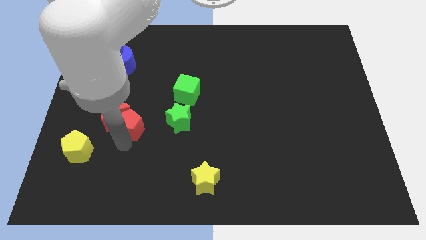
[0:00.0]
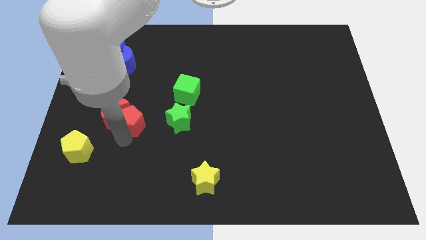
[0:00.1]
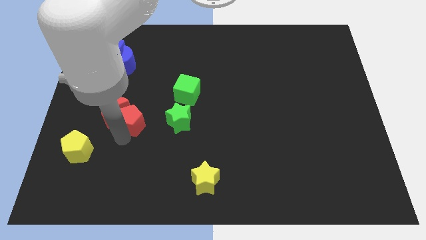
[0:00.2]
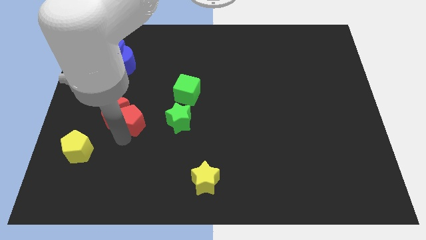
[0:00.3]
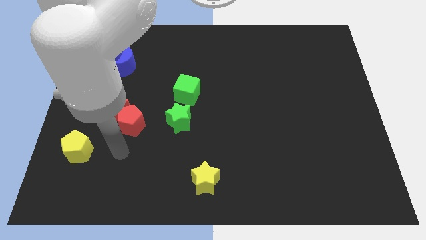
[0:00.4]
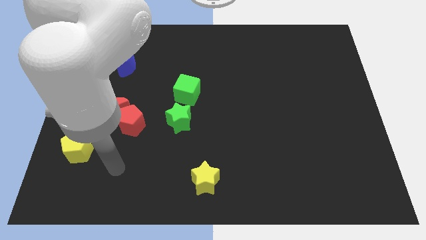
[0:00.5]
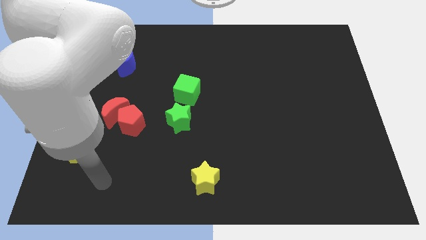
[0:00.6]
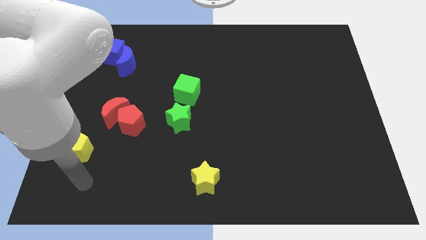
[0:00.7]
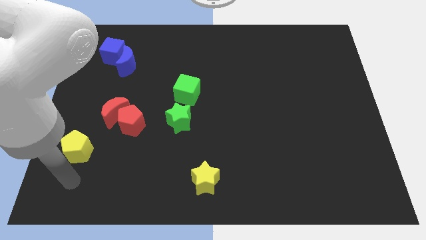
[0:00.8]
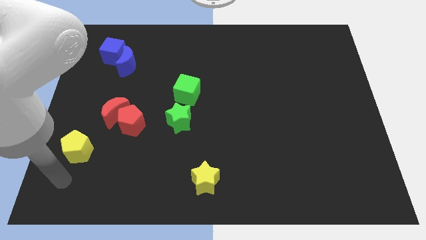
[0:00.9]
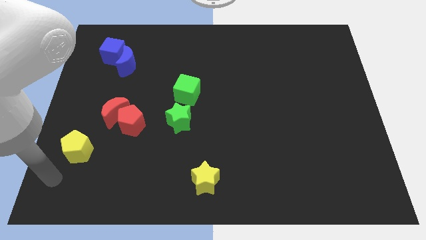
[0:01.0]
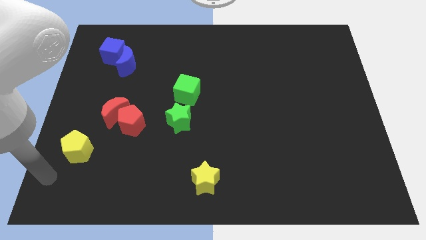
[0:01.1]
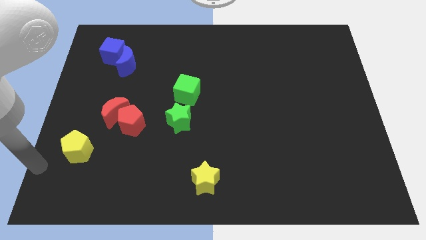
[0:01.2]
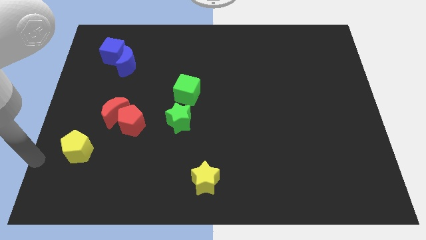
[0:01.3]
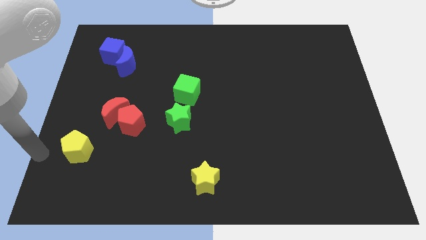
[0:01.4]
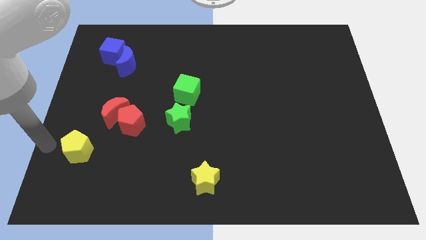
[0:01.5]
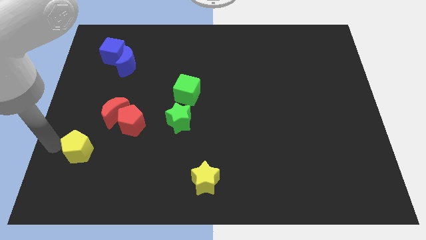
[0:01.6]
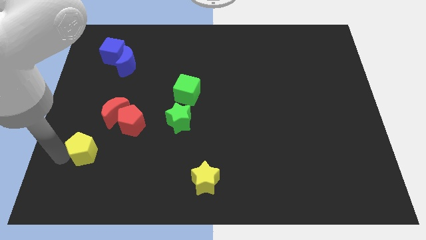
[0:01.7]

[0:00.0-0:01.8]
place your arm at the left of the yellow pentagon

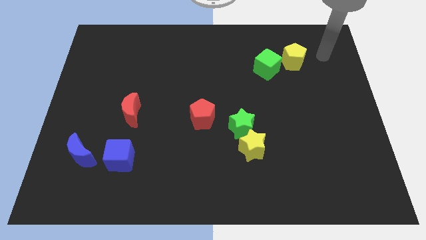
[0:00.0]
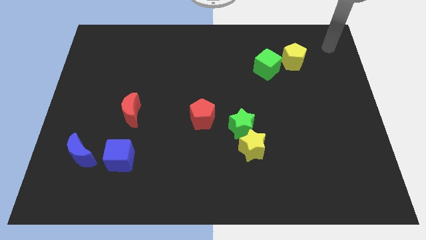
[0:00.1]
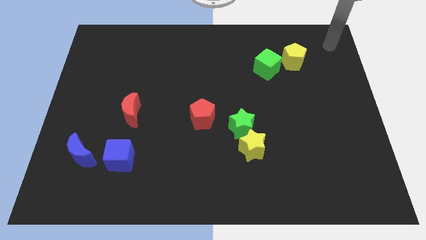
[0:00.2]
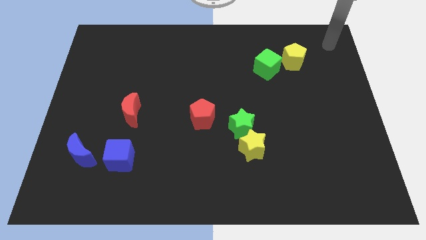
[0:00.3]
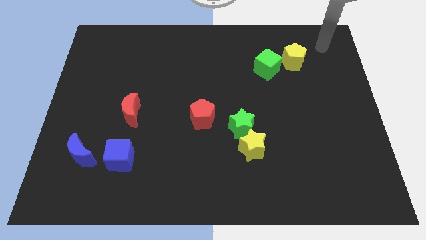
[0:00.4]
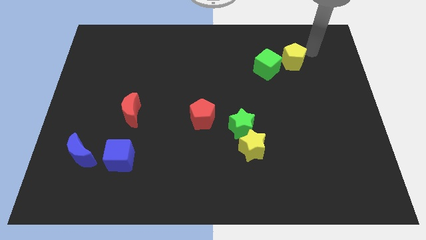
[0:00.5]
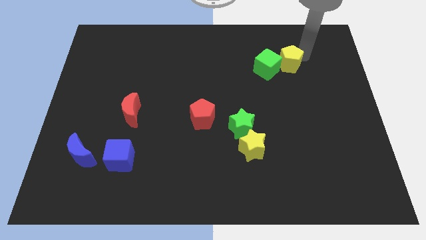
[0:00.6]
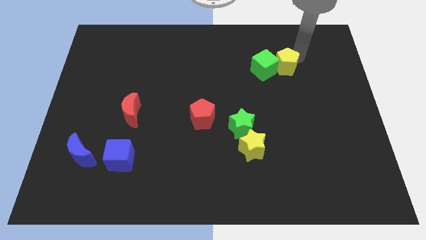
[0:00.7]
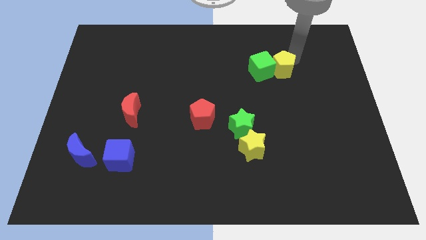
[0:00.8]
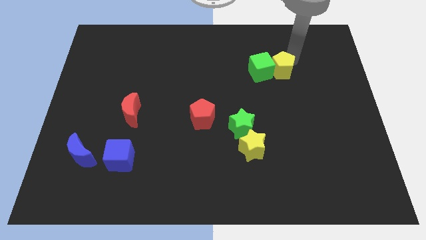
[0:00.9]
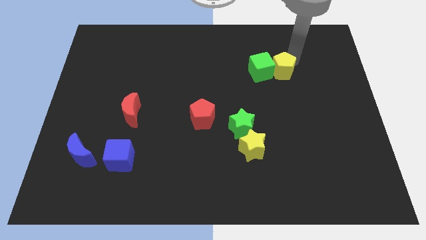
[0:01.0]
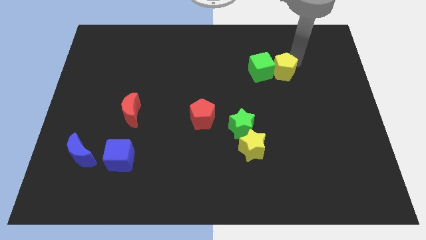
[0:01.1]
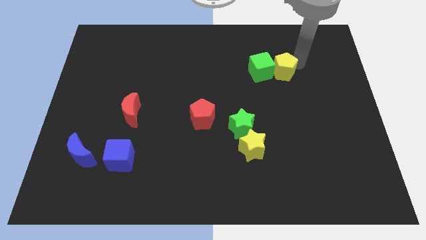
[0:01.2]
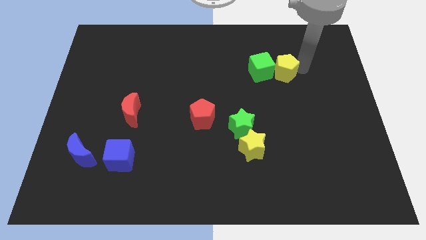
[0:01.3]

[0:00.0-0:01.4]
slightly push the yellow pentagon towards the bottom

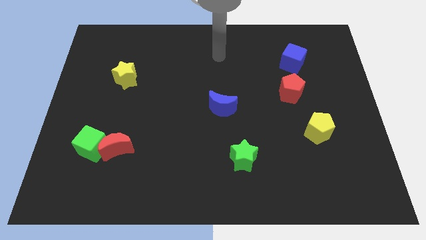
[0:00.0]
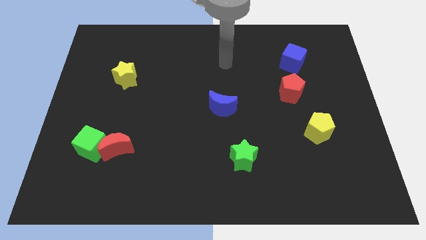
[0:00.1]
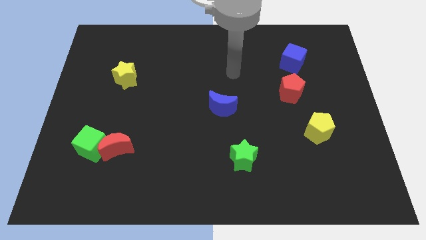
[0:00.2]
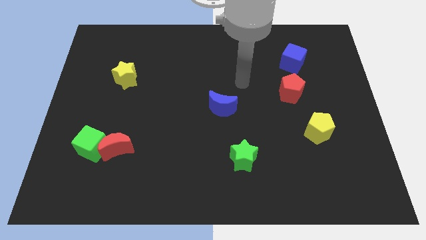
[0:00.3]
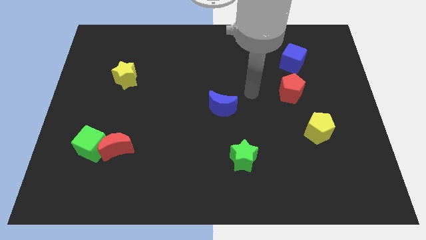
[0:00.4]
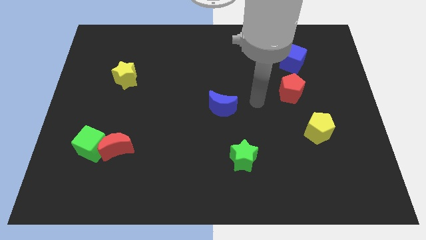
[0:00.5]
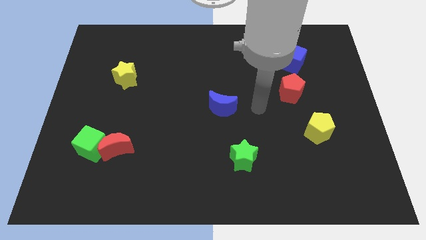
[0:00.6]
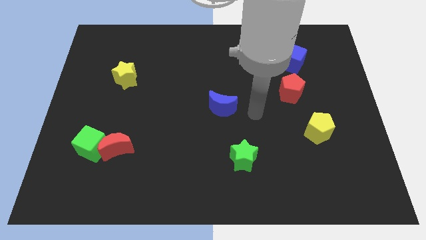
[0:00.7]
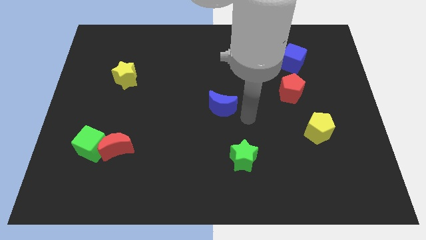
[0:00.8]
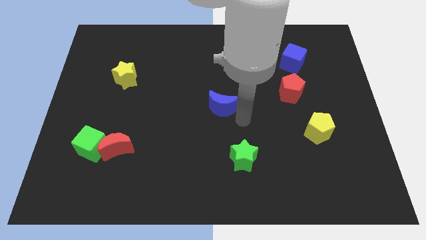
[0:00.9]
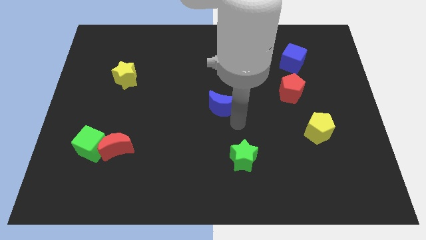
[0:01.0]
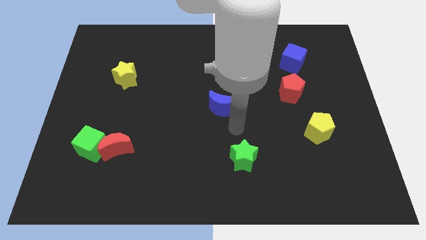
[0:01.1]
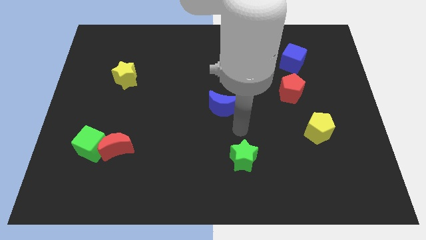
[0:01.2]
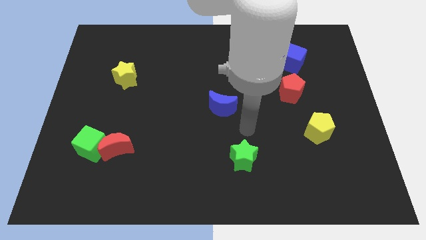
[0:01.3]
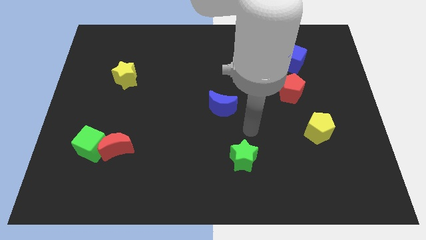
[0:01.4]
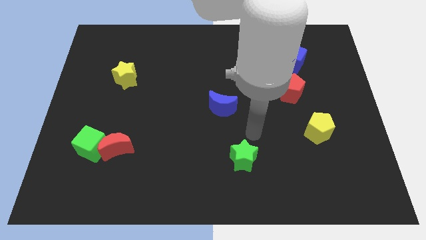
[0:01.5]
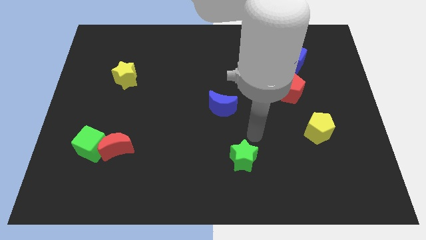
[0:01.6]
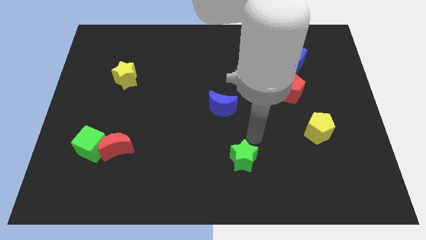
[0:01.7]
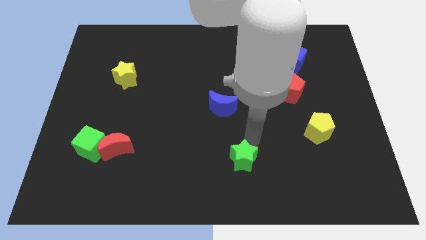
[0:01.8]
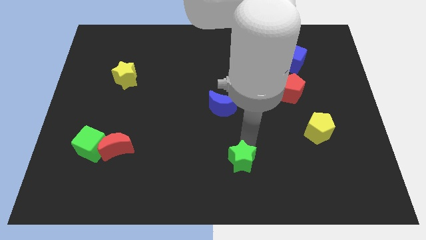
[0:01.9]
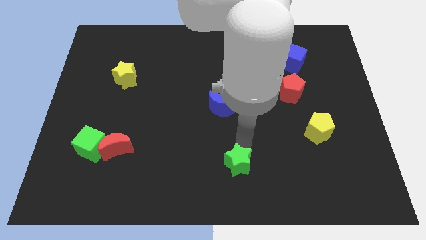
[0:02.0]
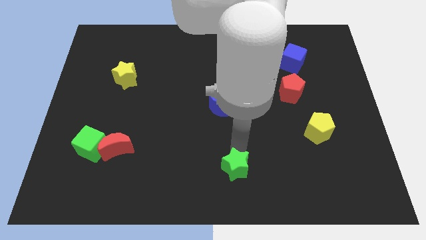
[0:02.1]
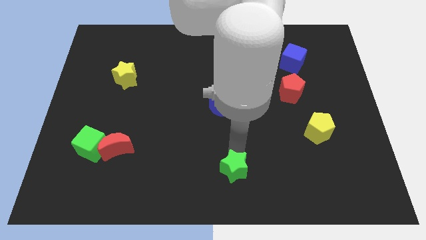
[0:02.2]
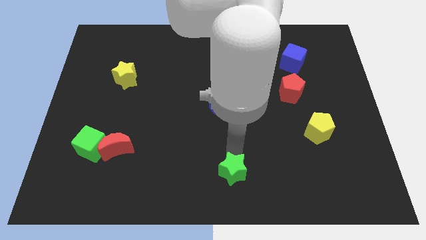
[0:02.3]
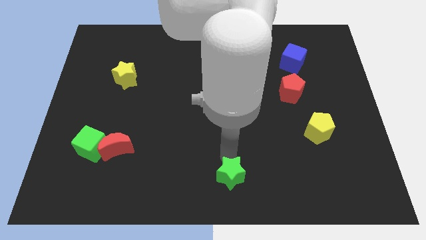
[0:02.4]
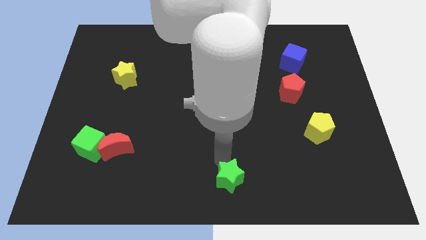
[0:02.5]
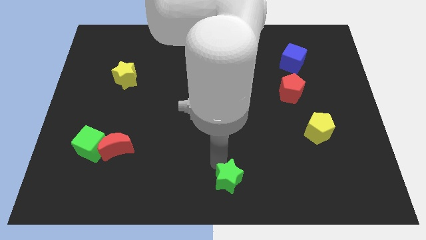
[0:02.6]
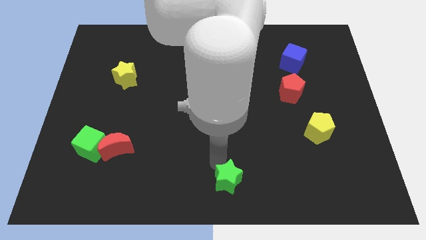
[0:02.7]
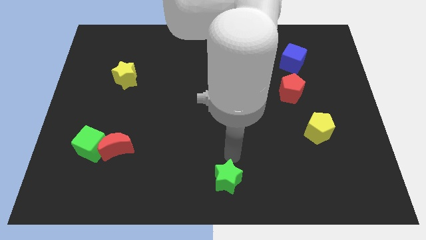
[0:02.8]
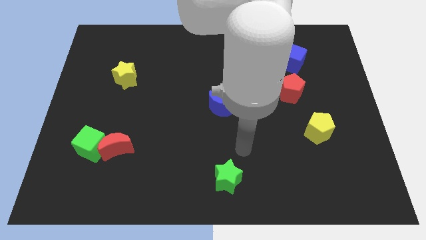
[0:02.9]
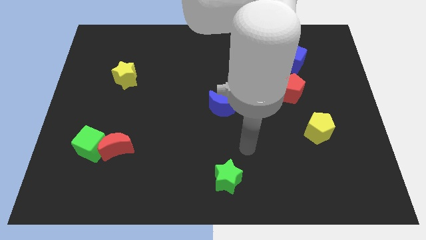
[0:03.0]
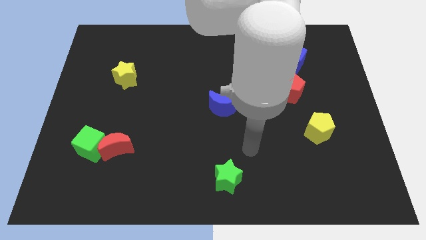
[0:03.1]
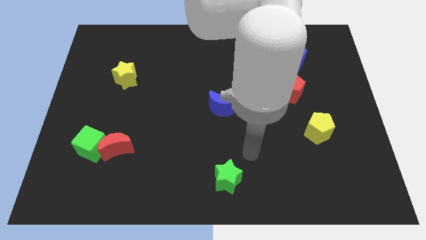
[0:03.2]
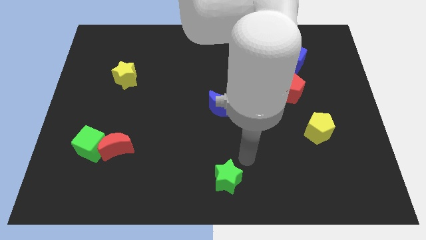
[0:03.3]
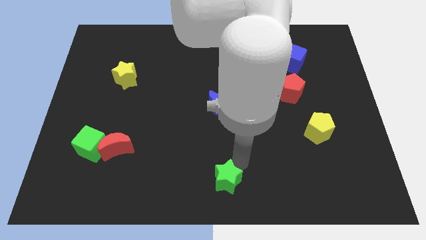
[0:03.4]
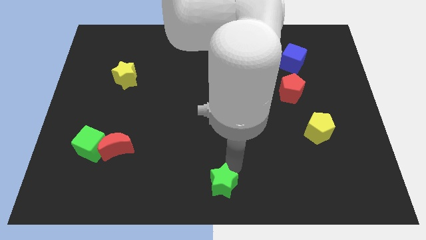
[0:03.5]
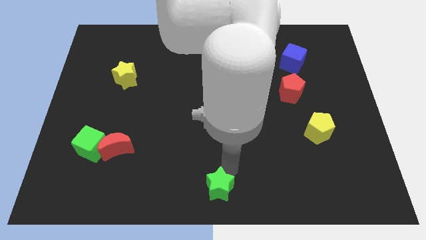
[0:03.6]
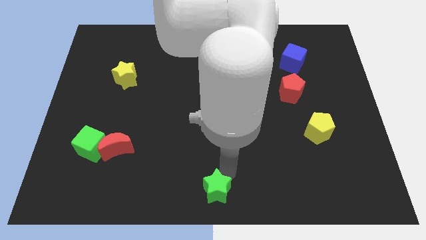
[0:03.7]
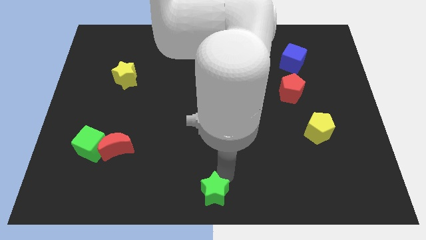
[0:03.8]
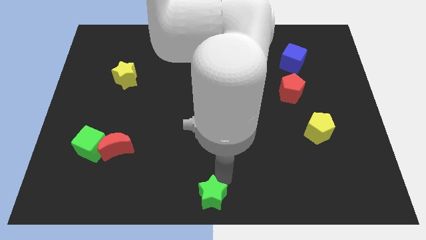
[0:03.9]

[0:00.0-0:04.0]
place green star to the bottom center of the board

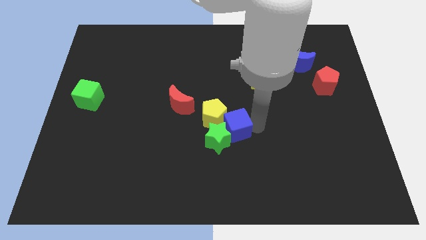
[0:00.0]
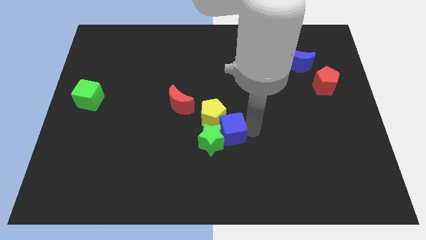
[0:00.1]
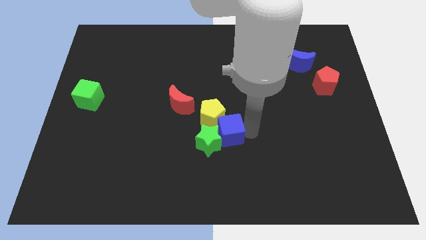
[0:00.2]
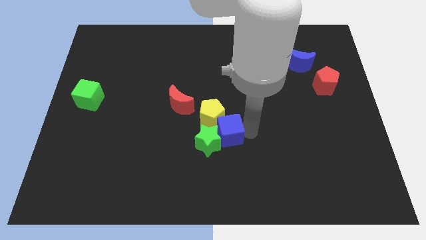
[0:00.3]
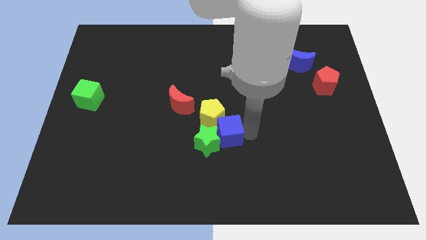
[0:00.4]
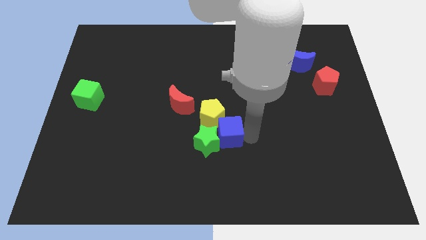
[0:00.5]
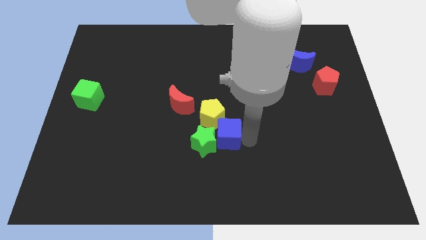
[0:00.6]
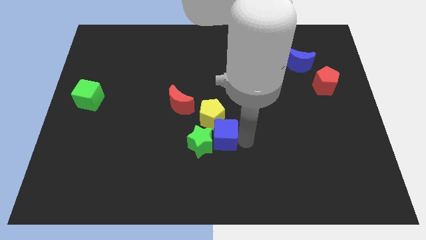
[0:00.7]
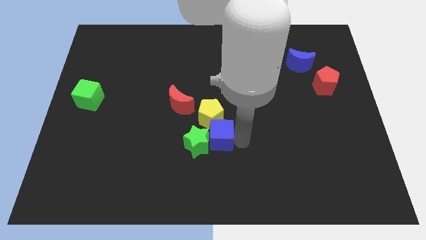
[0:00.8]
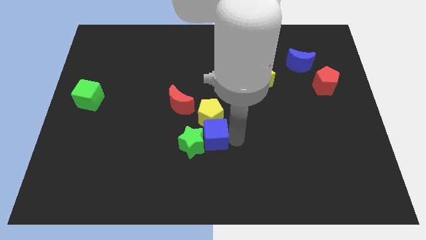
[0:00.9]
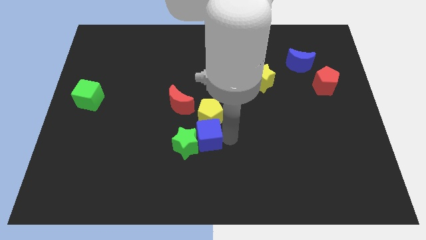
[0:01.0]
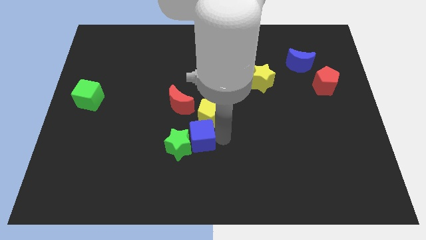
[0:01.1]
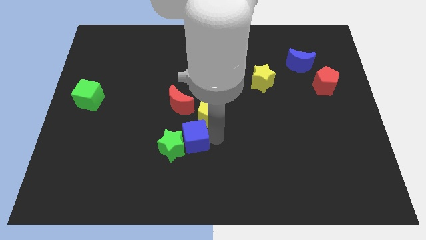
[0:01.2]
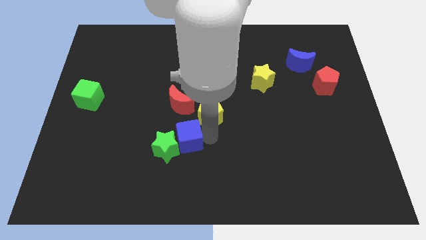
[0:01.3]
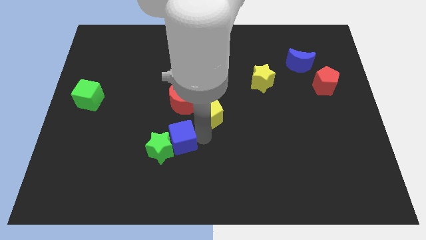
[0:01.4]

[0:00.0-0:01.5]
place the blue cube vertically below the red moon

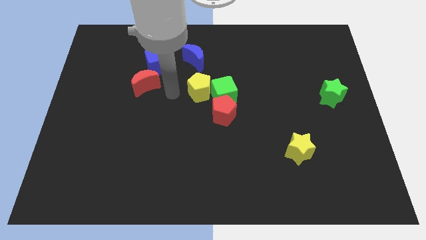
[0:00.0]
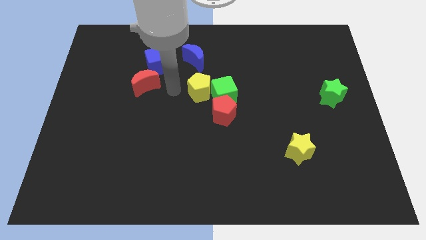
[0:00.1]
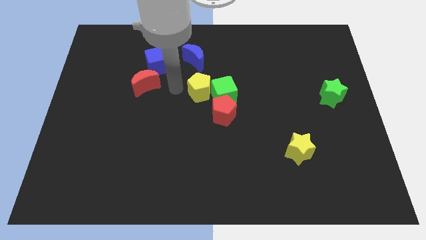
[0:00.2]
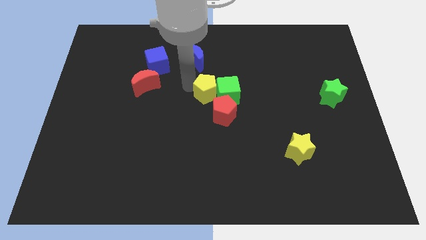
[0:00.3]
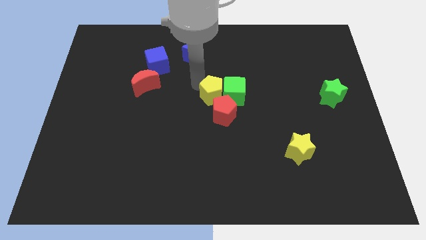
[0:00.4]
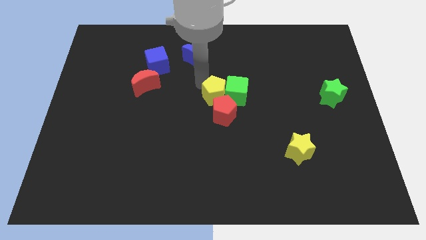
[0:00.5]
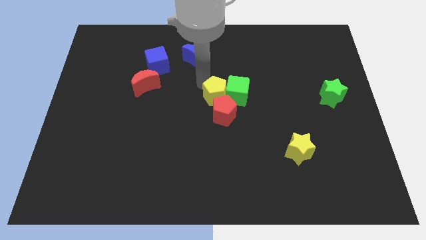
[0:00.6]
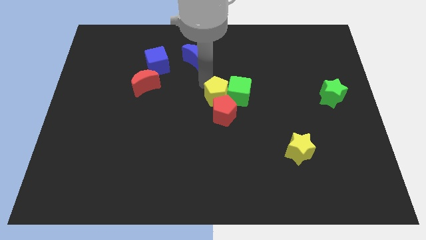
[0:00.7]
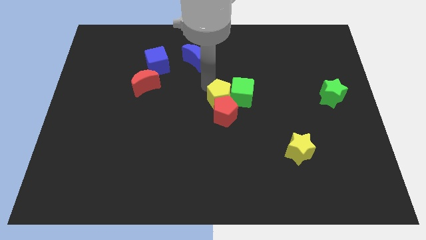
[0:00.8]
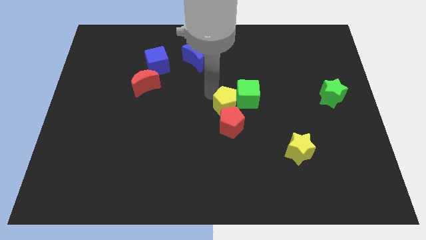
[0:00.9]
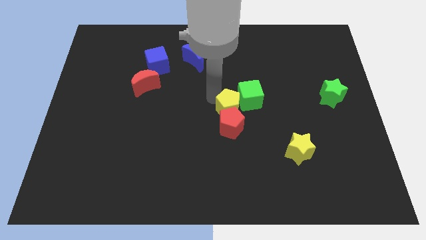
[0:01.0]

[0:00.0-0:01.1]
push yellow pentagon above red pentagon
